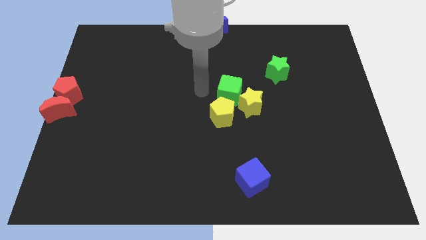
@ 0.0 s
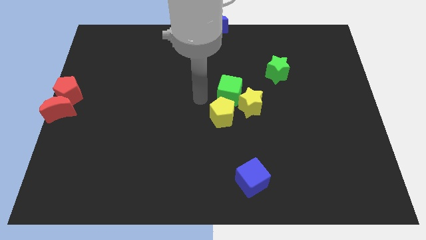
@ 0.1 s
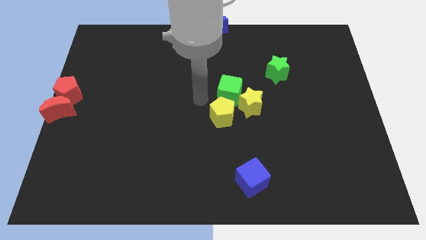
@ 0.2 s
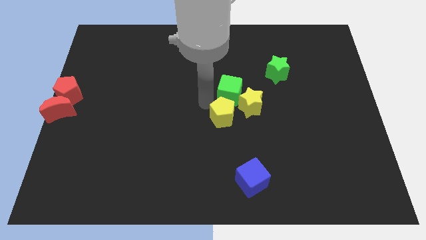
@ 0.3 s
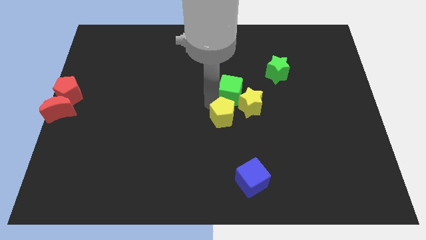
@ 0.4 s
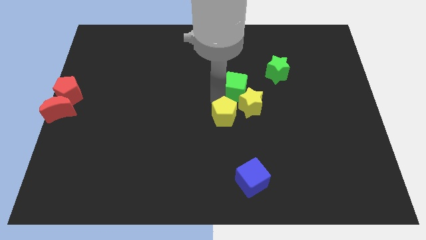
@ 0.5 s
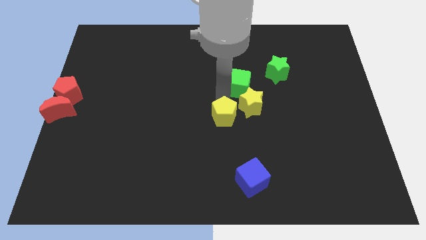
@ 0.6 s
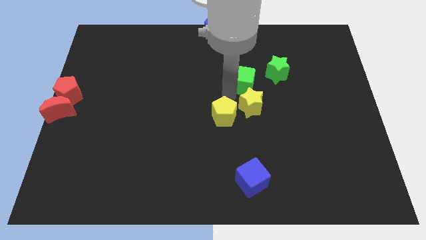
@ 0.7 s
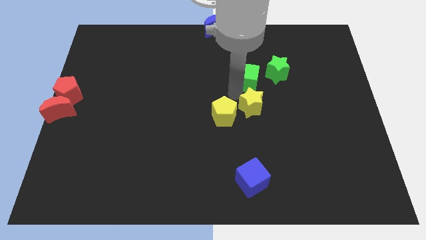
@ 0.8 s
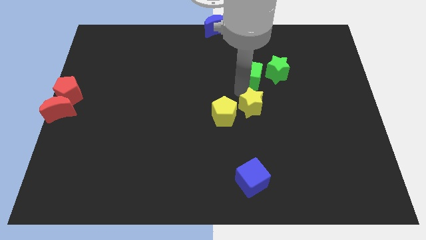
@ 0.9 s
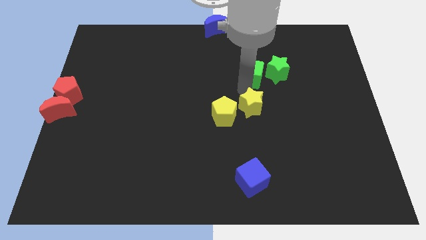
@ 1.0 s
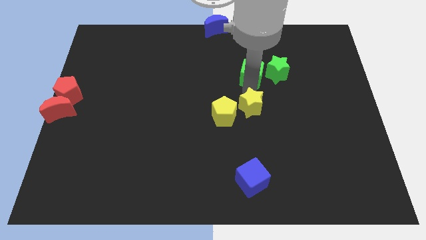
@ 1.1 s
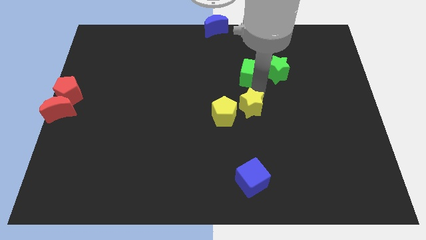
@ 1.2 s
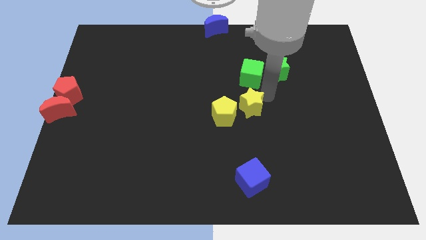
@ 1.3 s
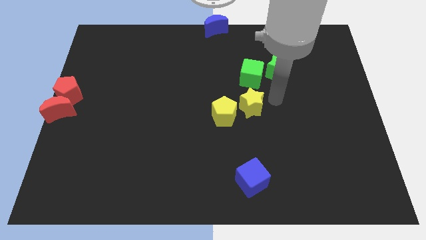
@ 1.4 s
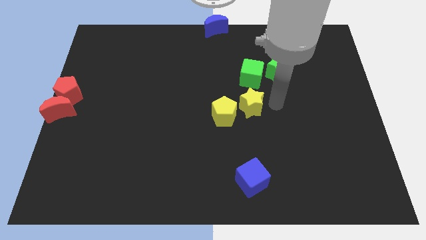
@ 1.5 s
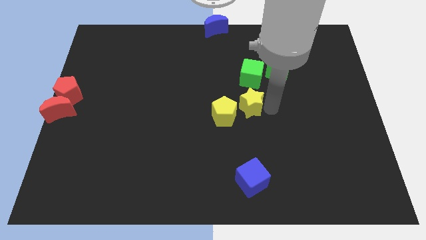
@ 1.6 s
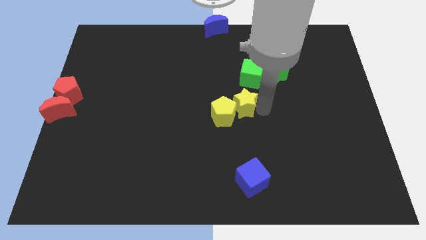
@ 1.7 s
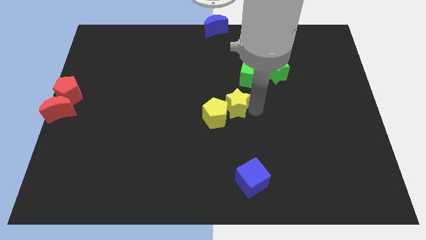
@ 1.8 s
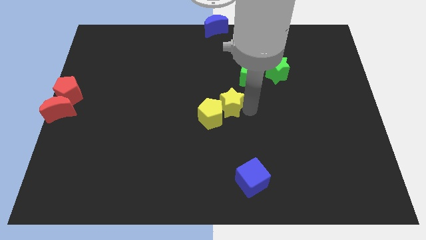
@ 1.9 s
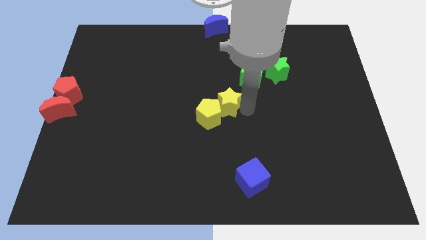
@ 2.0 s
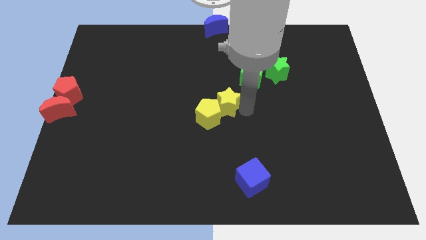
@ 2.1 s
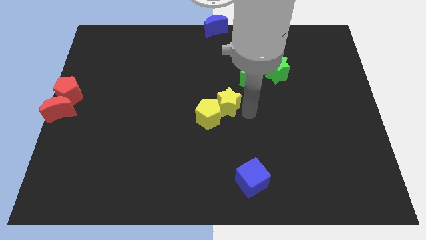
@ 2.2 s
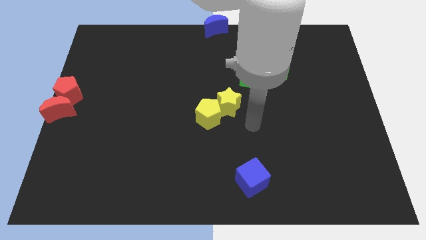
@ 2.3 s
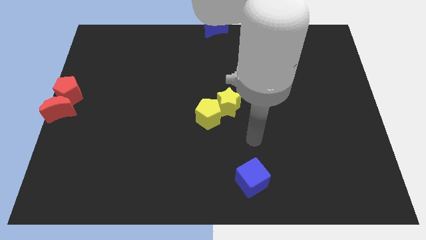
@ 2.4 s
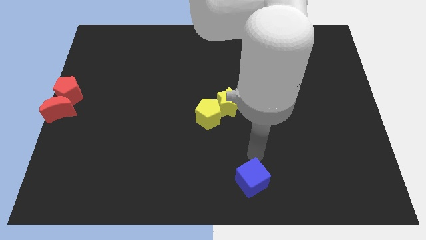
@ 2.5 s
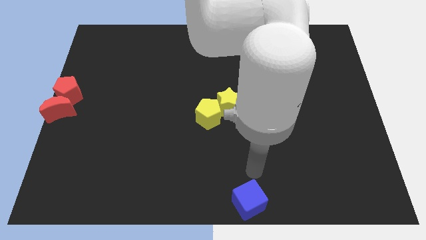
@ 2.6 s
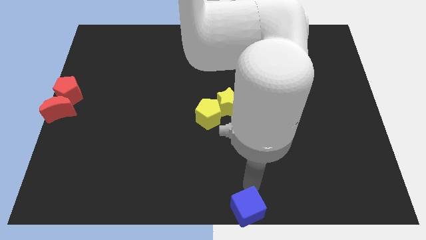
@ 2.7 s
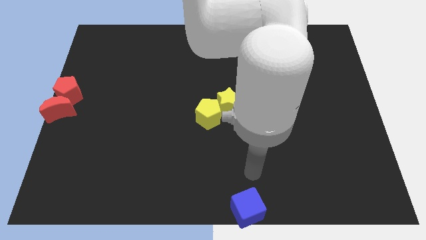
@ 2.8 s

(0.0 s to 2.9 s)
push the blue cube to the bottom center

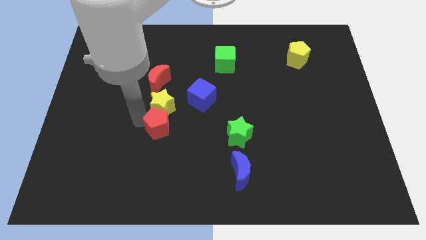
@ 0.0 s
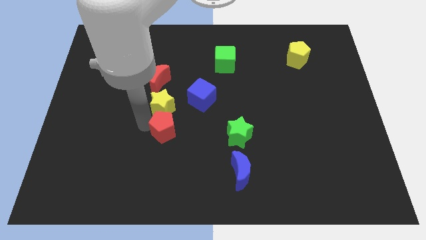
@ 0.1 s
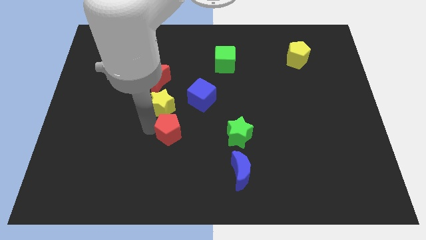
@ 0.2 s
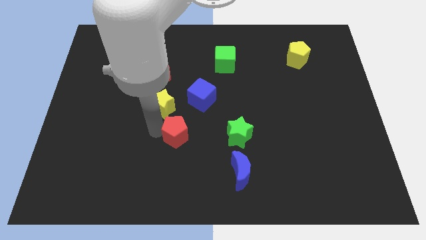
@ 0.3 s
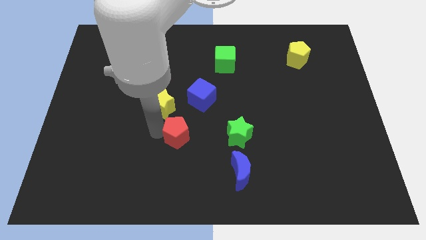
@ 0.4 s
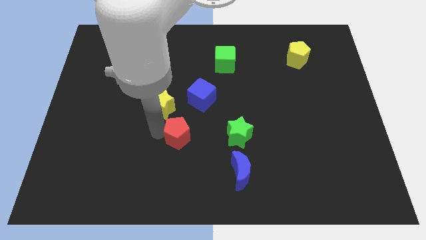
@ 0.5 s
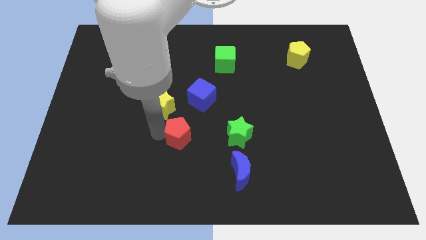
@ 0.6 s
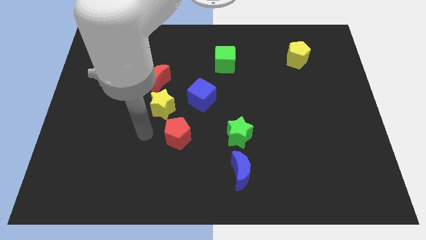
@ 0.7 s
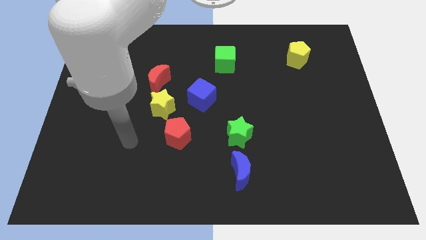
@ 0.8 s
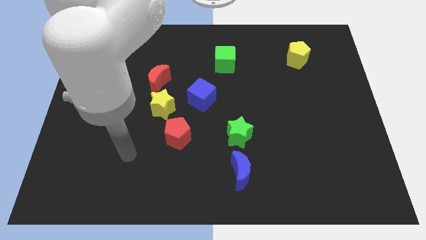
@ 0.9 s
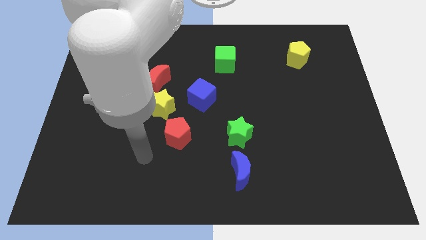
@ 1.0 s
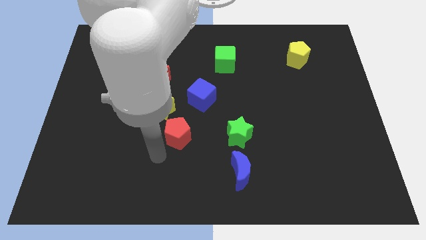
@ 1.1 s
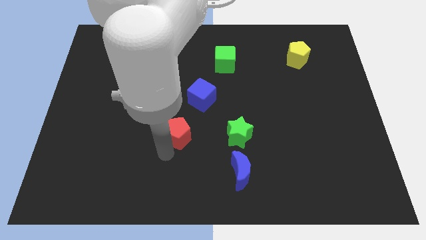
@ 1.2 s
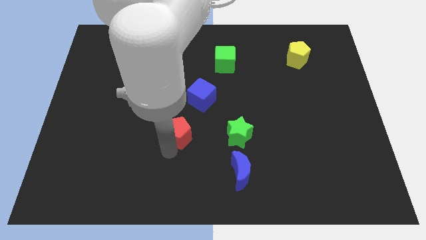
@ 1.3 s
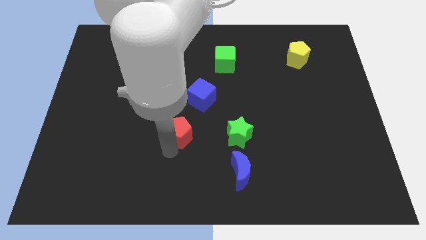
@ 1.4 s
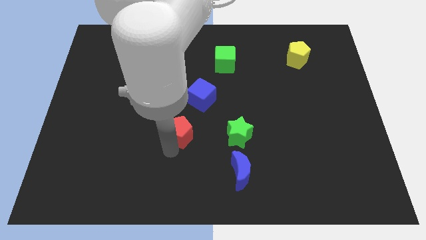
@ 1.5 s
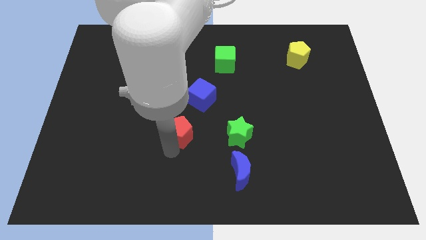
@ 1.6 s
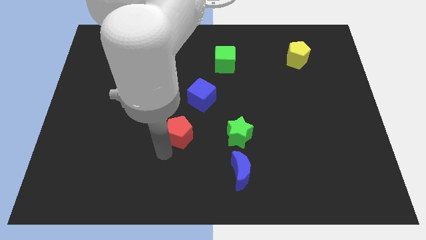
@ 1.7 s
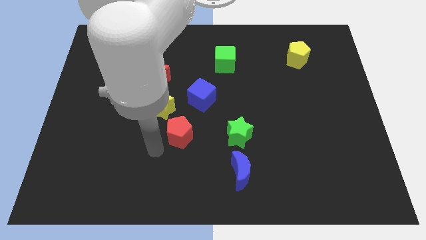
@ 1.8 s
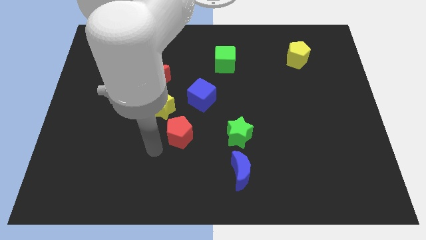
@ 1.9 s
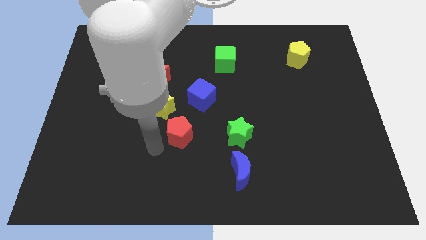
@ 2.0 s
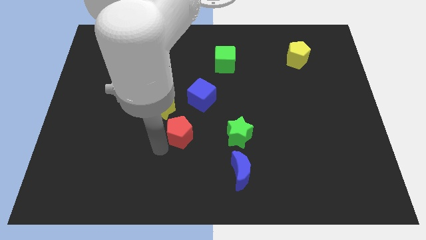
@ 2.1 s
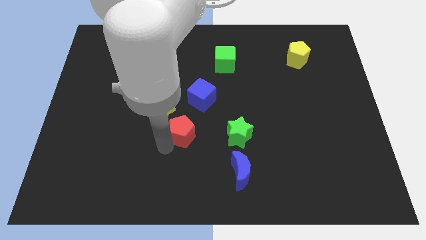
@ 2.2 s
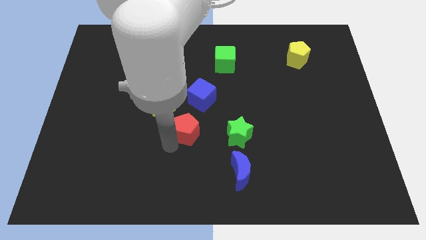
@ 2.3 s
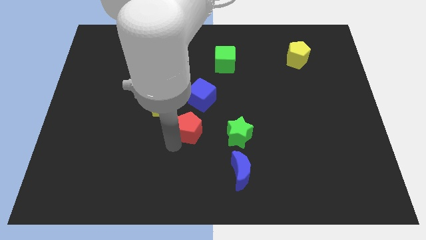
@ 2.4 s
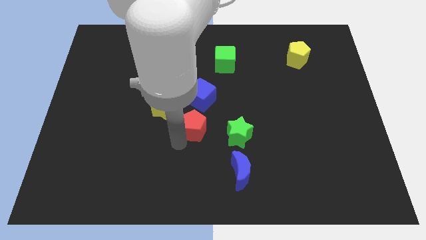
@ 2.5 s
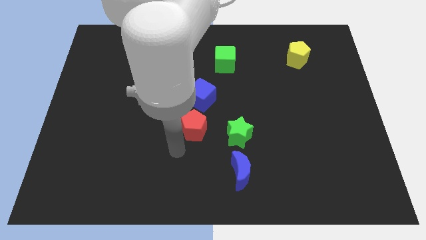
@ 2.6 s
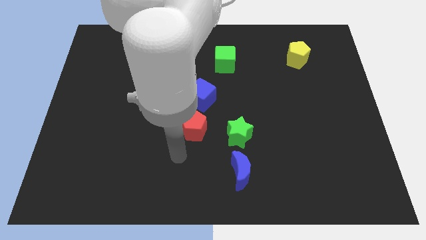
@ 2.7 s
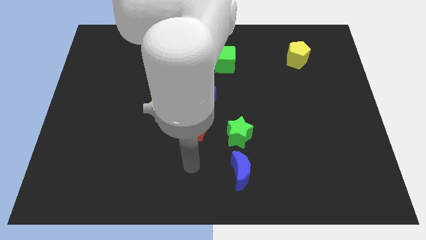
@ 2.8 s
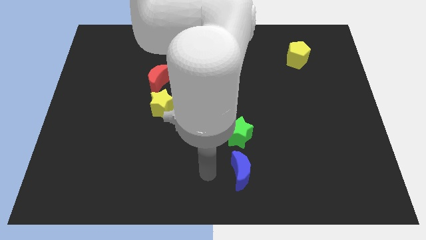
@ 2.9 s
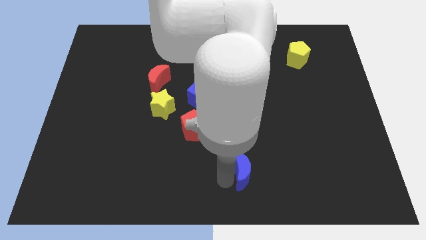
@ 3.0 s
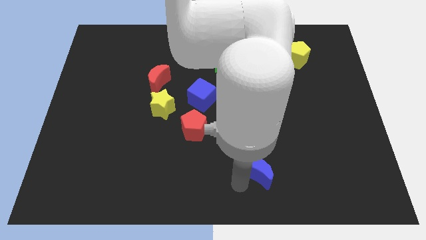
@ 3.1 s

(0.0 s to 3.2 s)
place the red pentagon below the blue cube

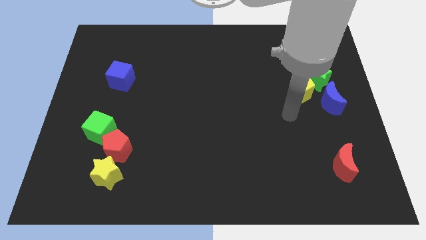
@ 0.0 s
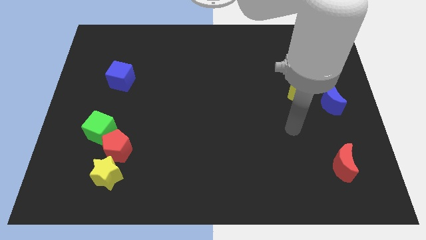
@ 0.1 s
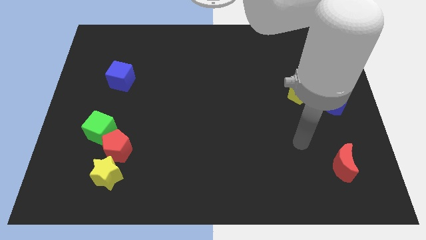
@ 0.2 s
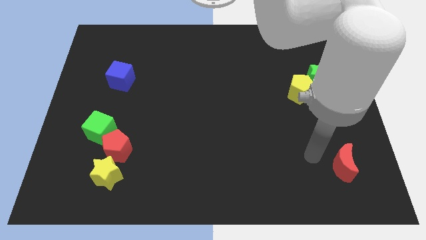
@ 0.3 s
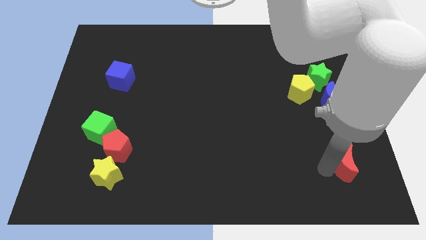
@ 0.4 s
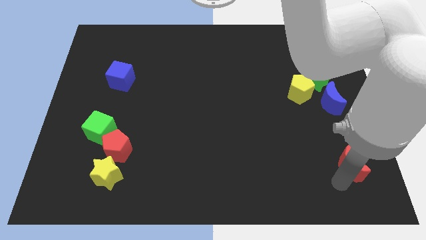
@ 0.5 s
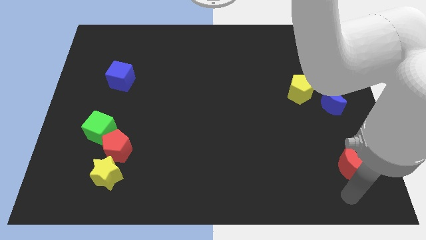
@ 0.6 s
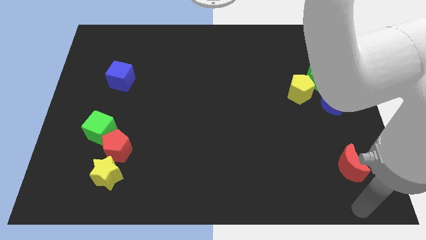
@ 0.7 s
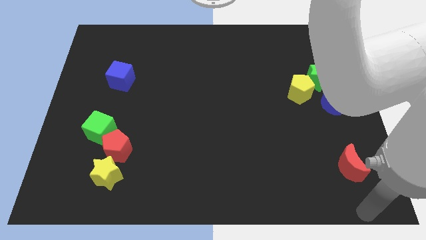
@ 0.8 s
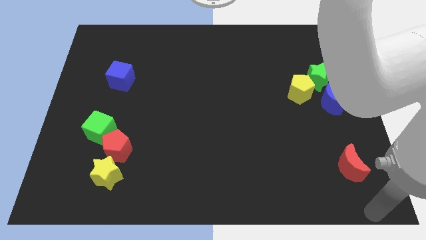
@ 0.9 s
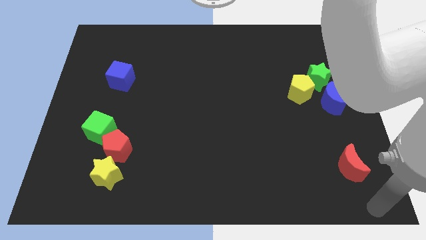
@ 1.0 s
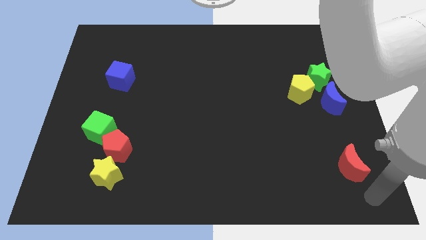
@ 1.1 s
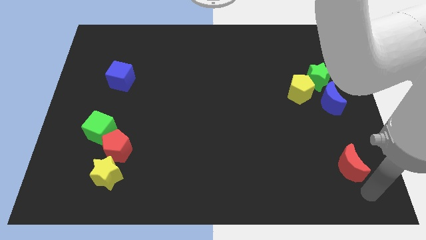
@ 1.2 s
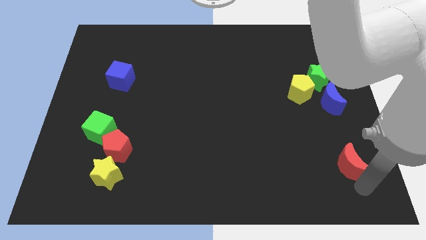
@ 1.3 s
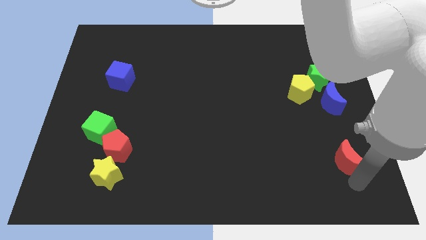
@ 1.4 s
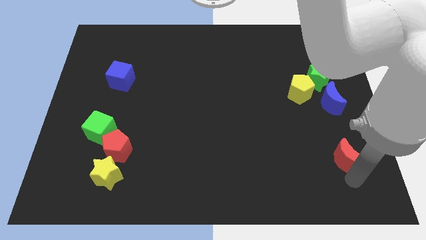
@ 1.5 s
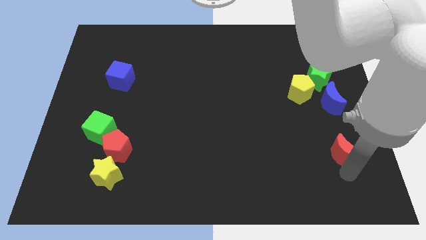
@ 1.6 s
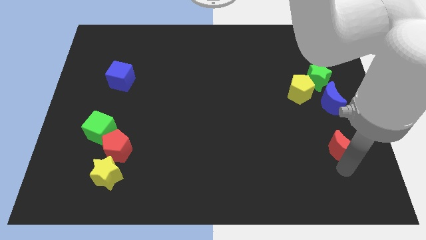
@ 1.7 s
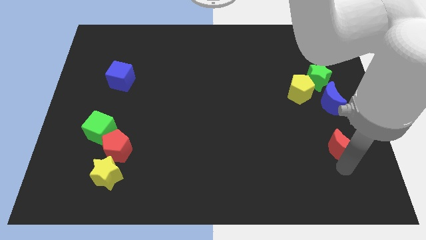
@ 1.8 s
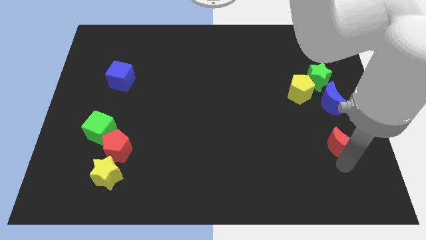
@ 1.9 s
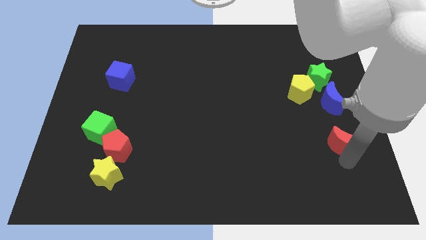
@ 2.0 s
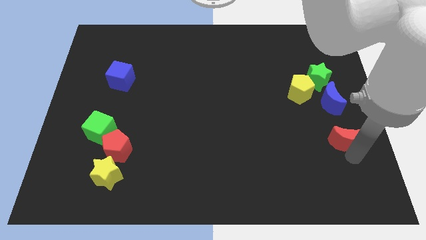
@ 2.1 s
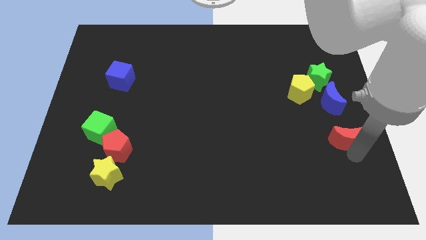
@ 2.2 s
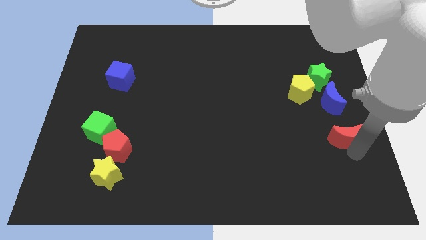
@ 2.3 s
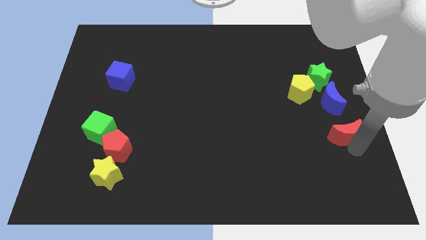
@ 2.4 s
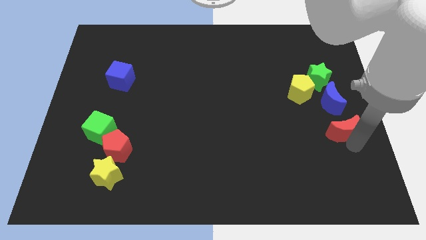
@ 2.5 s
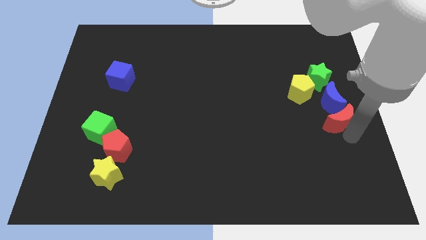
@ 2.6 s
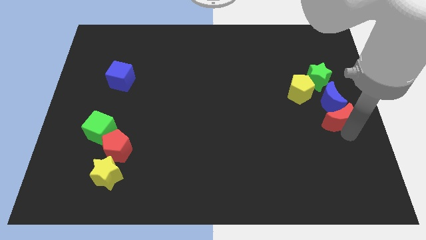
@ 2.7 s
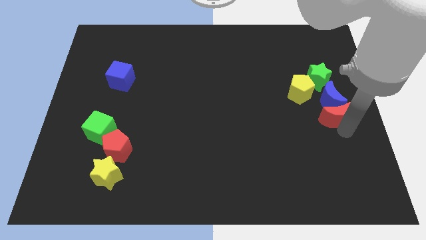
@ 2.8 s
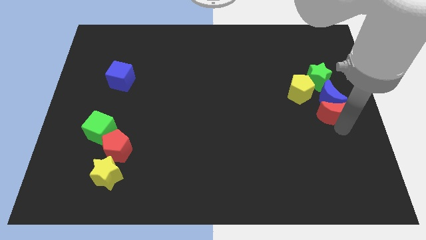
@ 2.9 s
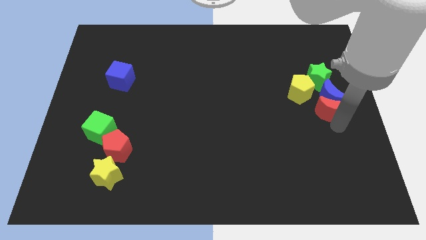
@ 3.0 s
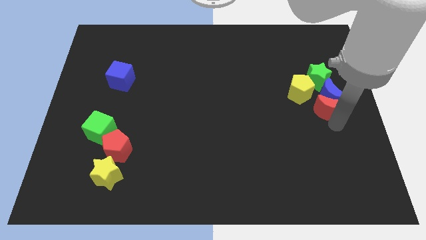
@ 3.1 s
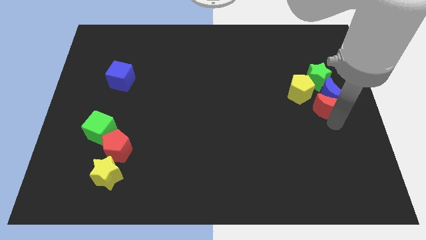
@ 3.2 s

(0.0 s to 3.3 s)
move the red moon into the group of blocks
